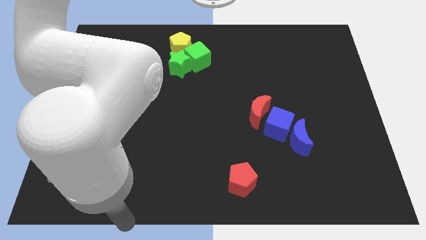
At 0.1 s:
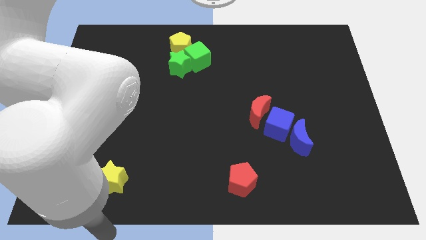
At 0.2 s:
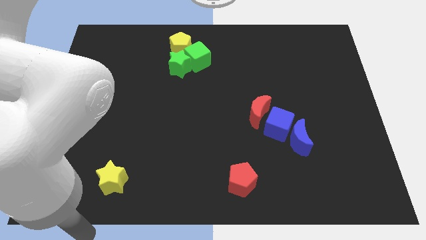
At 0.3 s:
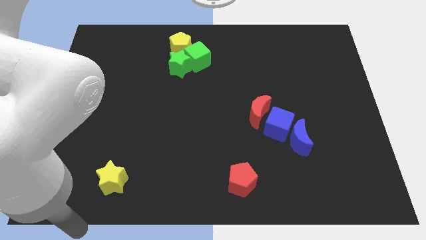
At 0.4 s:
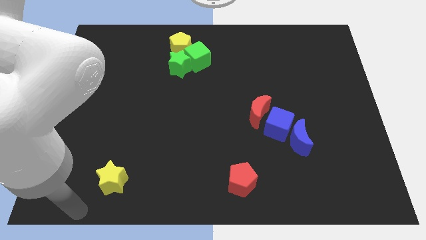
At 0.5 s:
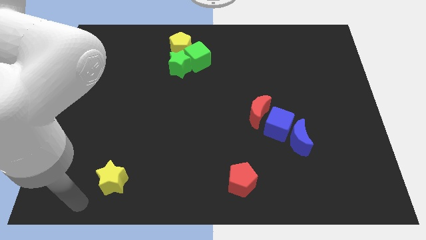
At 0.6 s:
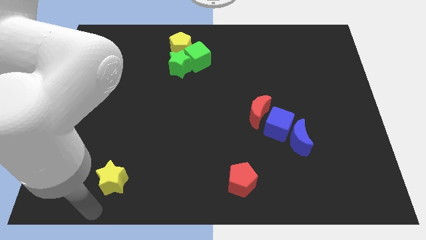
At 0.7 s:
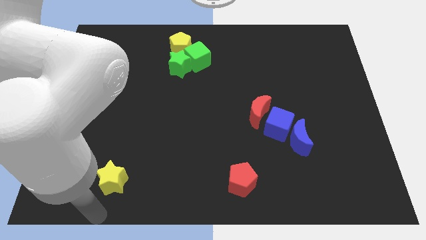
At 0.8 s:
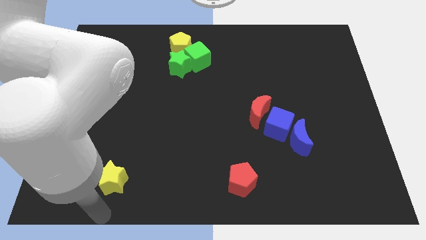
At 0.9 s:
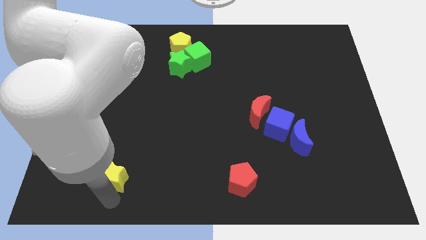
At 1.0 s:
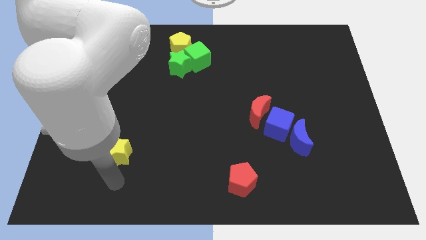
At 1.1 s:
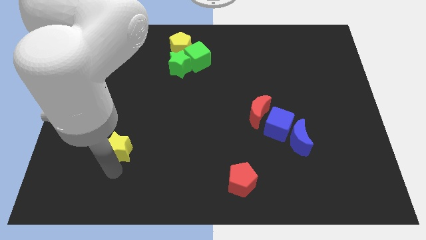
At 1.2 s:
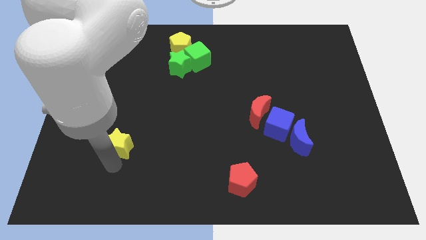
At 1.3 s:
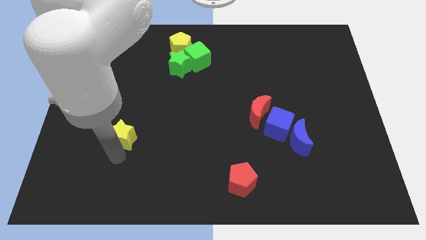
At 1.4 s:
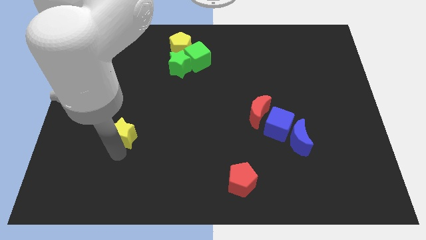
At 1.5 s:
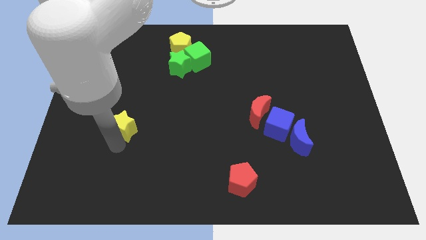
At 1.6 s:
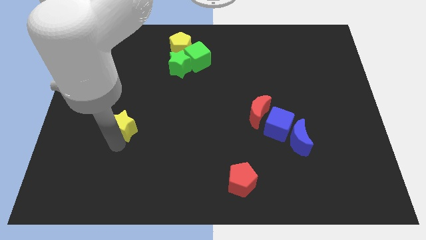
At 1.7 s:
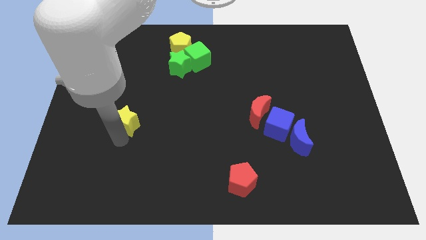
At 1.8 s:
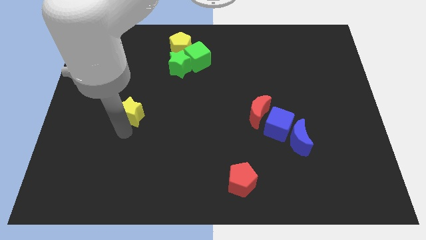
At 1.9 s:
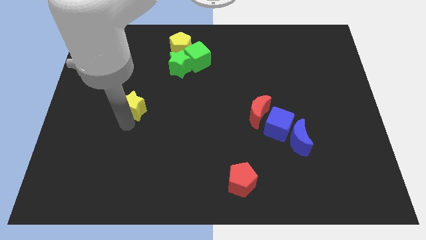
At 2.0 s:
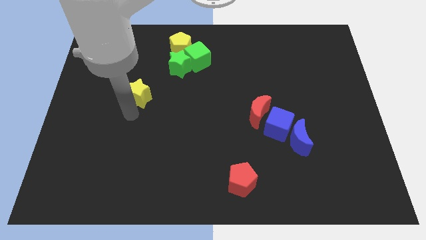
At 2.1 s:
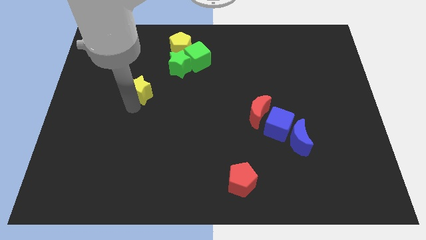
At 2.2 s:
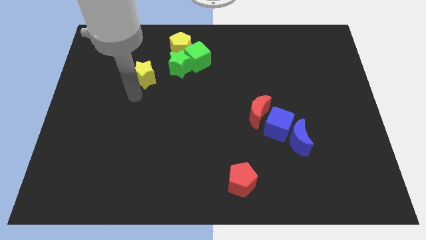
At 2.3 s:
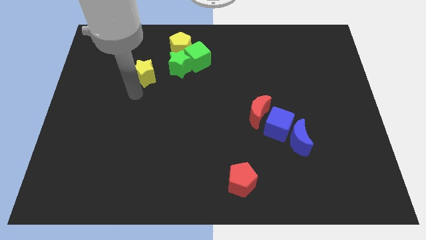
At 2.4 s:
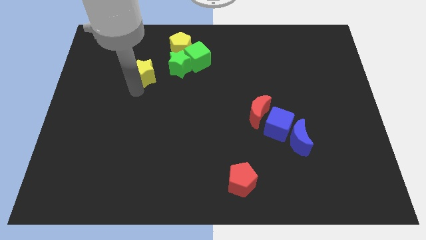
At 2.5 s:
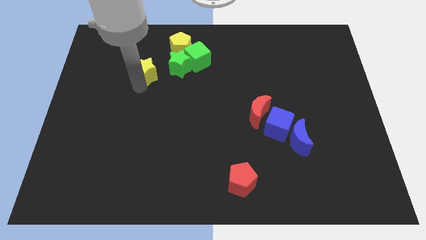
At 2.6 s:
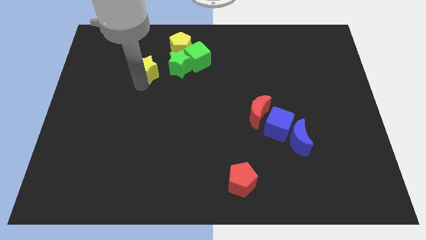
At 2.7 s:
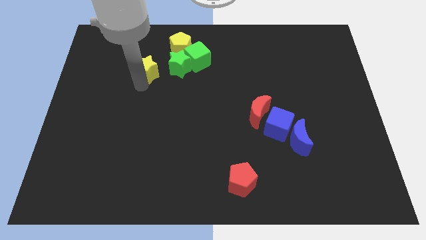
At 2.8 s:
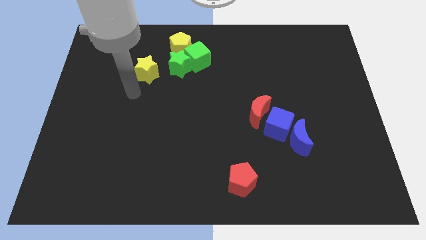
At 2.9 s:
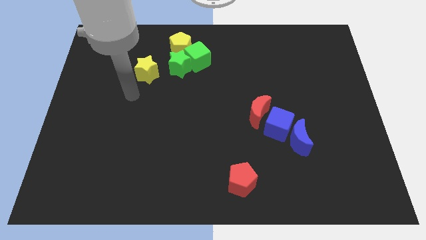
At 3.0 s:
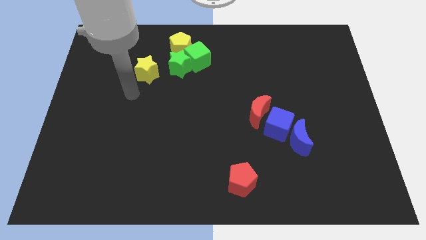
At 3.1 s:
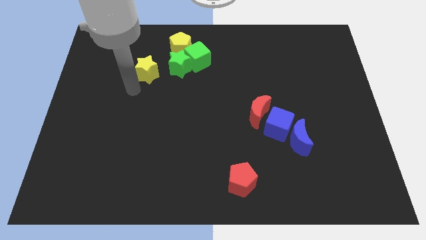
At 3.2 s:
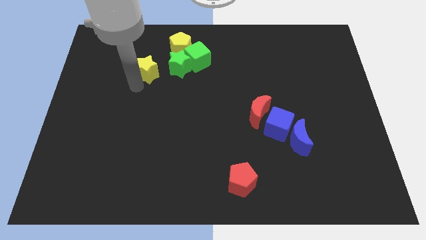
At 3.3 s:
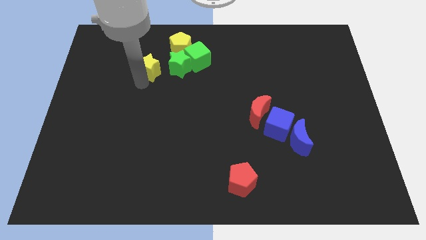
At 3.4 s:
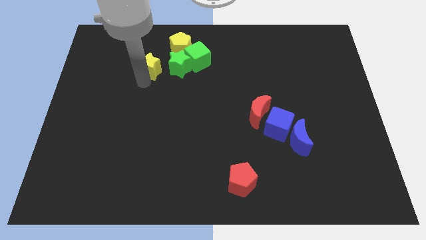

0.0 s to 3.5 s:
move the yellow star left to the green star

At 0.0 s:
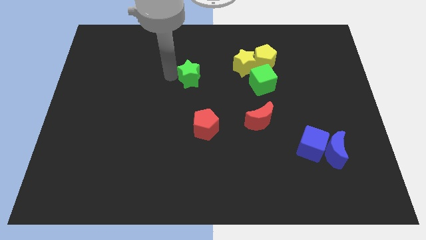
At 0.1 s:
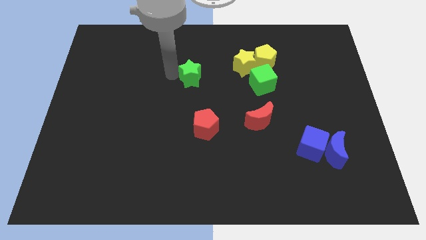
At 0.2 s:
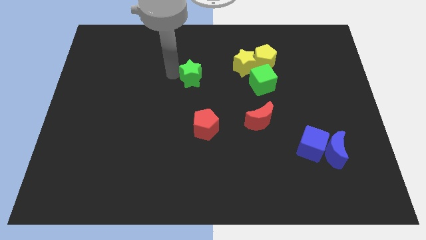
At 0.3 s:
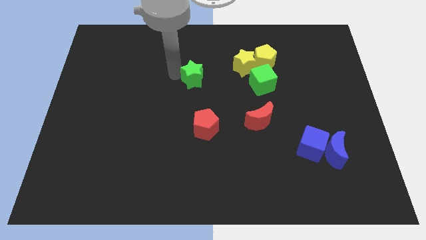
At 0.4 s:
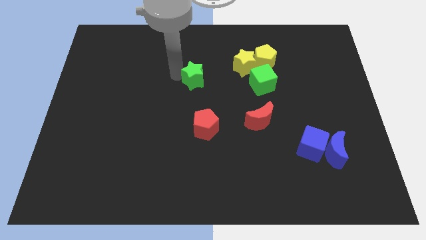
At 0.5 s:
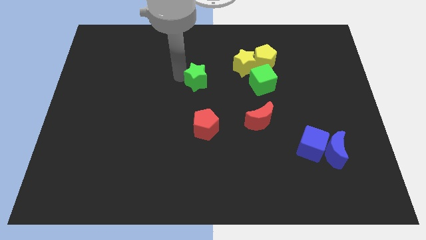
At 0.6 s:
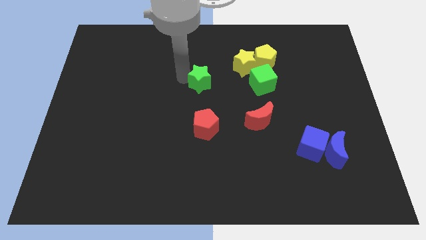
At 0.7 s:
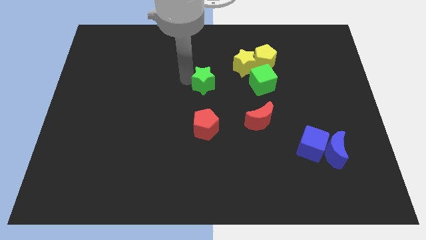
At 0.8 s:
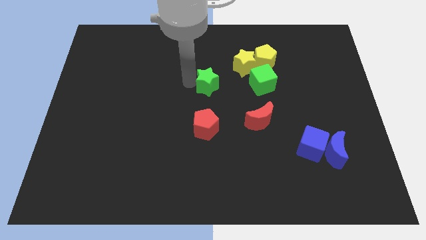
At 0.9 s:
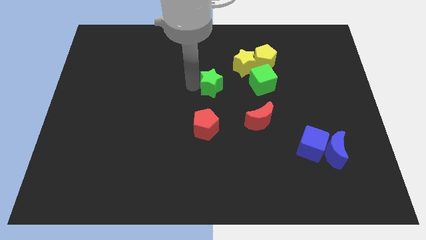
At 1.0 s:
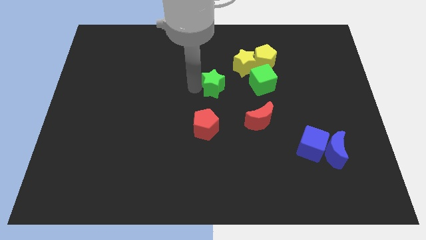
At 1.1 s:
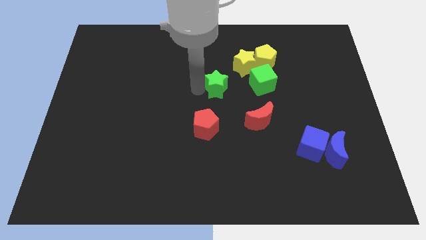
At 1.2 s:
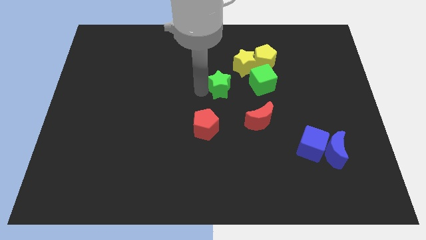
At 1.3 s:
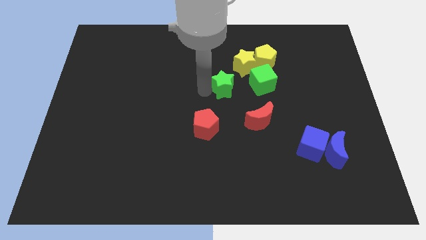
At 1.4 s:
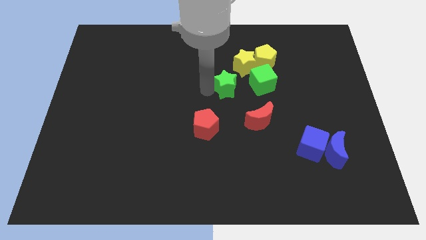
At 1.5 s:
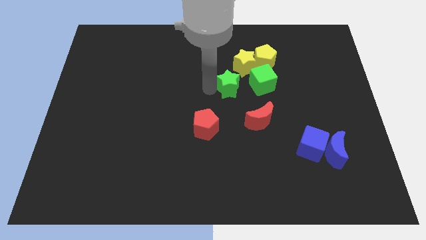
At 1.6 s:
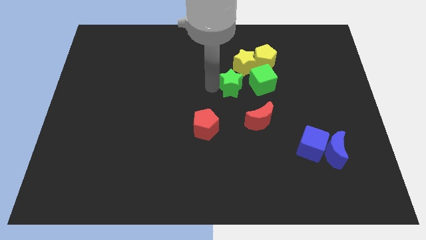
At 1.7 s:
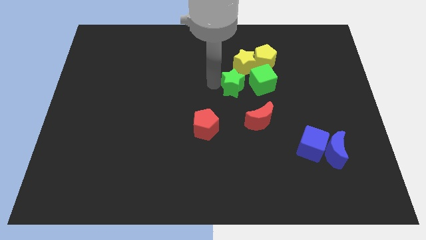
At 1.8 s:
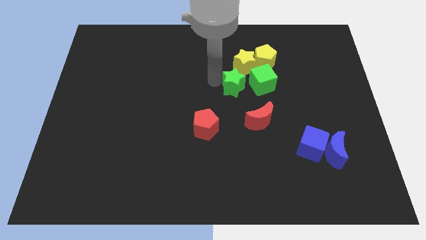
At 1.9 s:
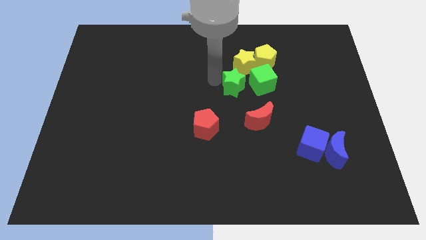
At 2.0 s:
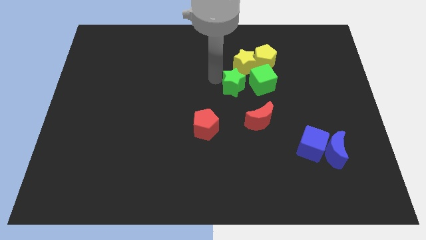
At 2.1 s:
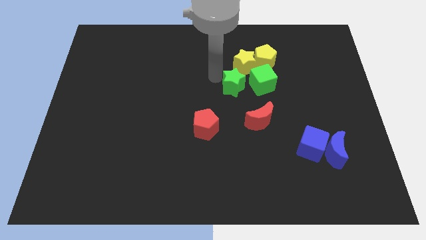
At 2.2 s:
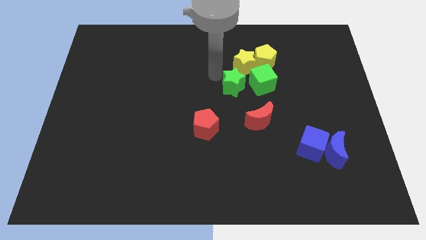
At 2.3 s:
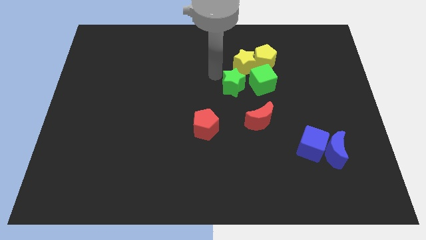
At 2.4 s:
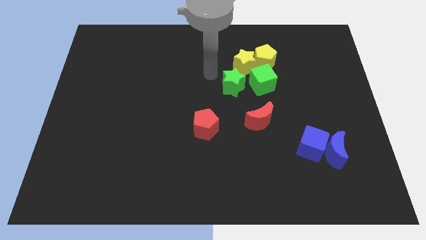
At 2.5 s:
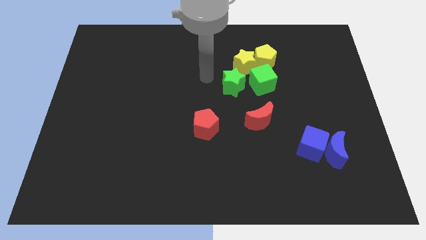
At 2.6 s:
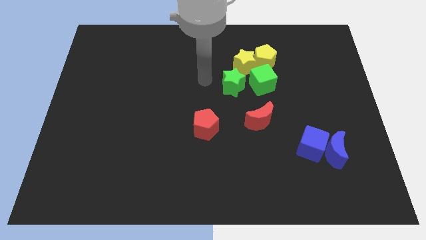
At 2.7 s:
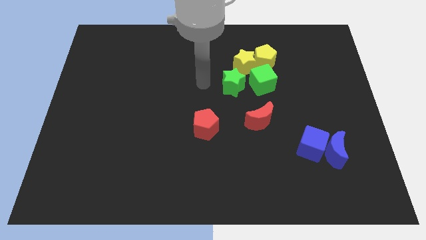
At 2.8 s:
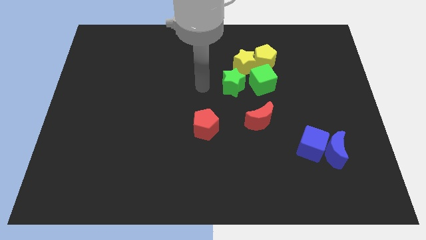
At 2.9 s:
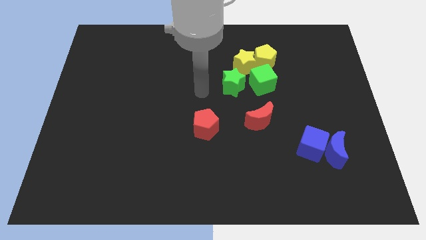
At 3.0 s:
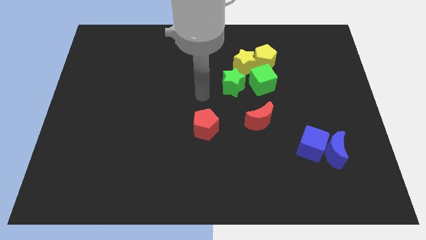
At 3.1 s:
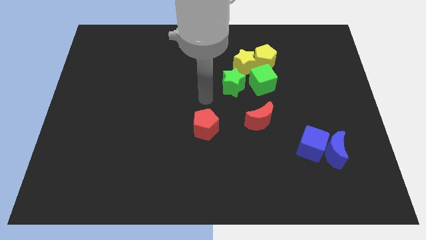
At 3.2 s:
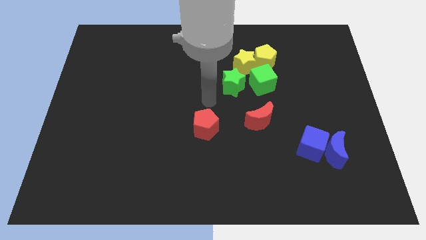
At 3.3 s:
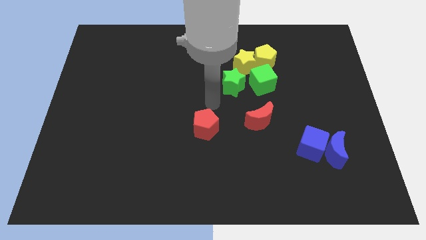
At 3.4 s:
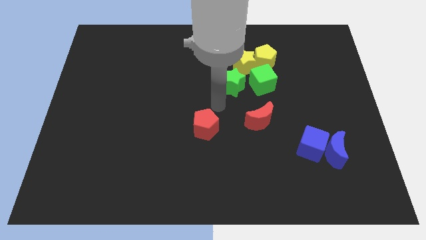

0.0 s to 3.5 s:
place green star close to yellow star

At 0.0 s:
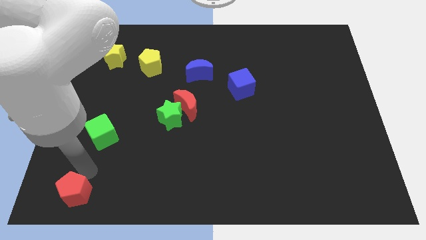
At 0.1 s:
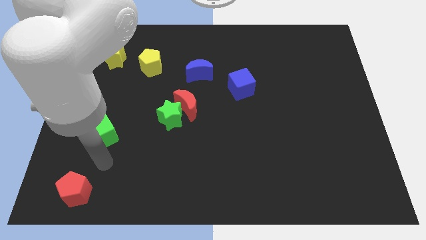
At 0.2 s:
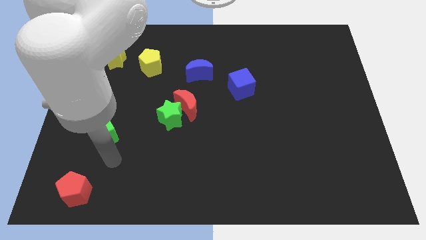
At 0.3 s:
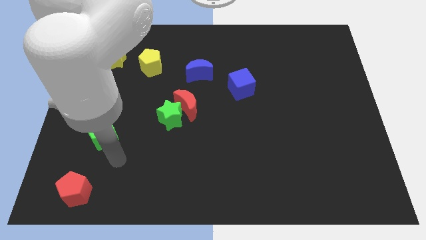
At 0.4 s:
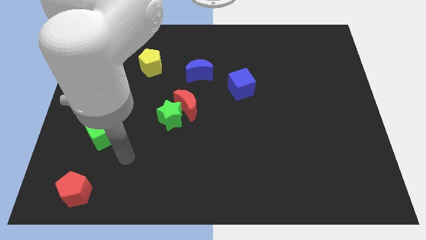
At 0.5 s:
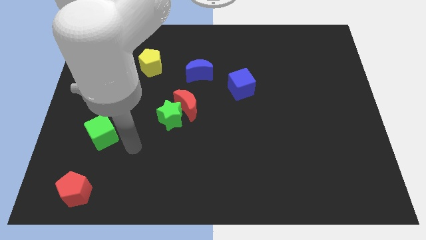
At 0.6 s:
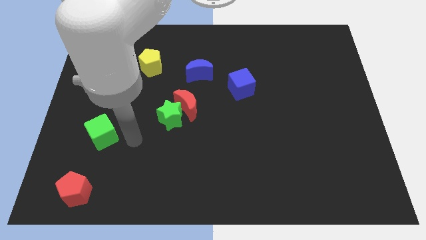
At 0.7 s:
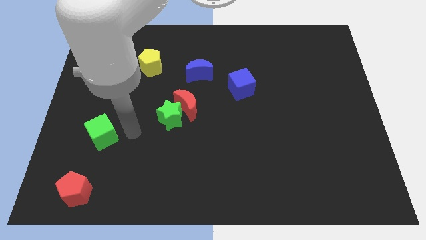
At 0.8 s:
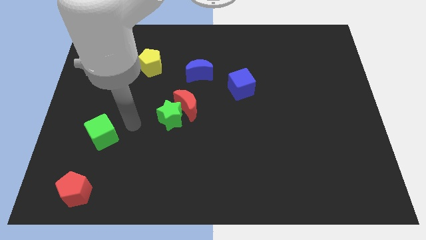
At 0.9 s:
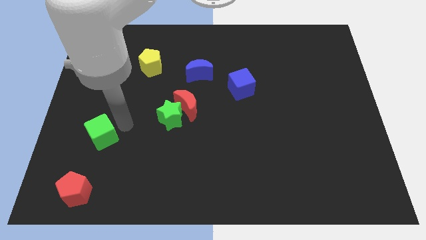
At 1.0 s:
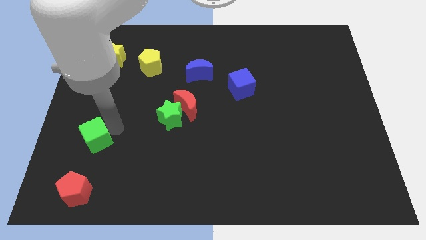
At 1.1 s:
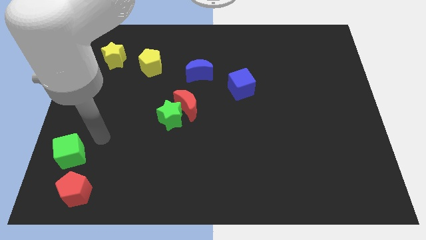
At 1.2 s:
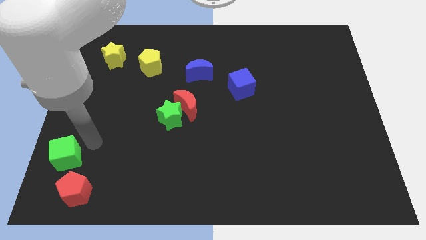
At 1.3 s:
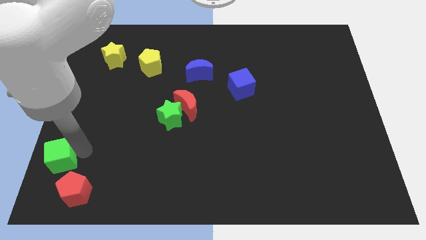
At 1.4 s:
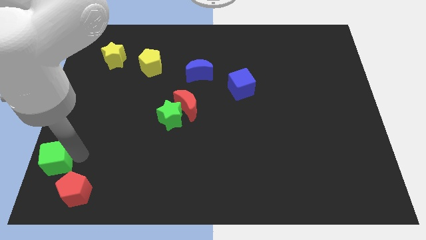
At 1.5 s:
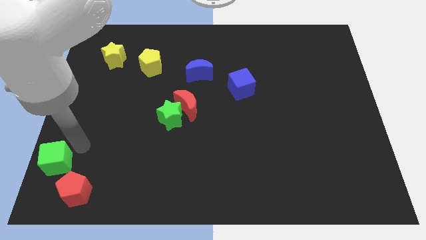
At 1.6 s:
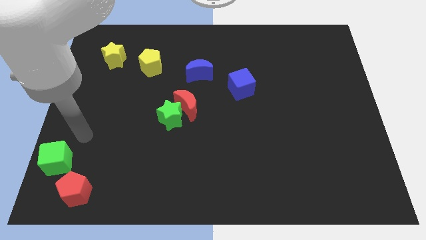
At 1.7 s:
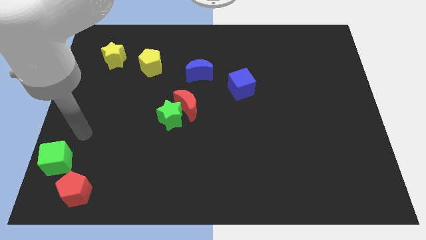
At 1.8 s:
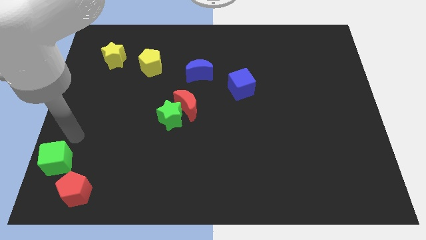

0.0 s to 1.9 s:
move the green cube slightly to the bottom left of the board
